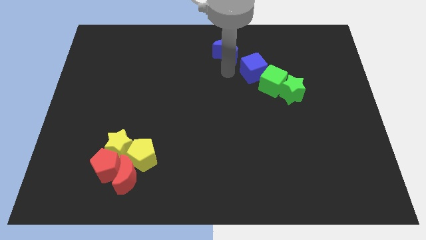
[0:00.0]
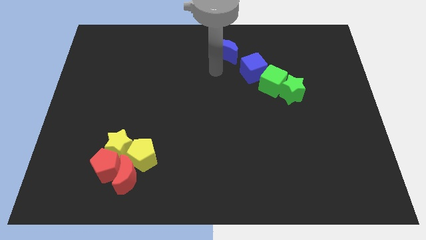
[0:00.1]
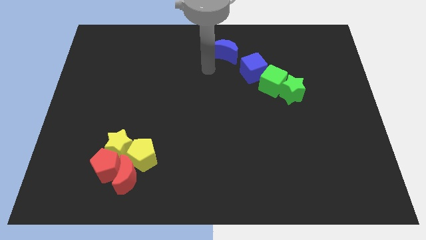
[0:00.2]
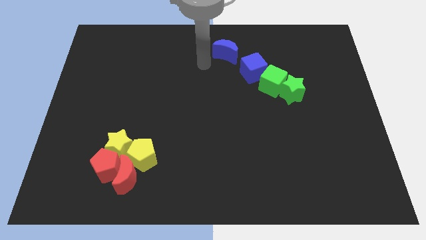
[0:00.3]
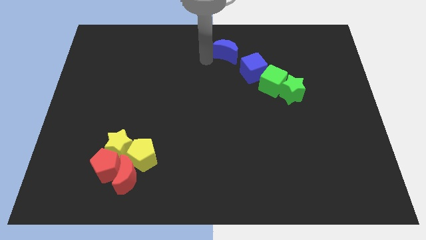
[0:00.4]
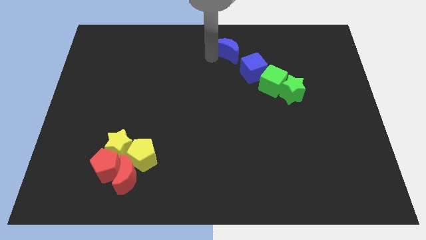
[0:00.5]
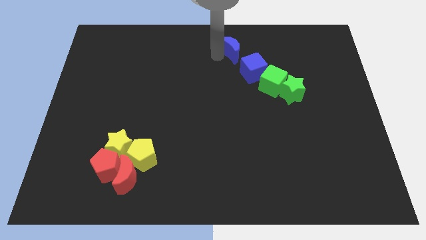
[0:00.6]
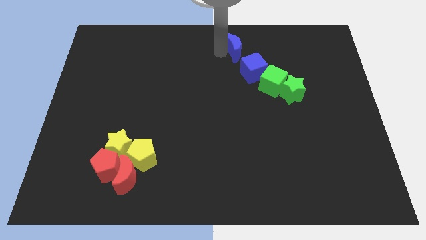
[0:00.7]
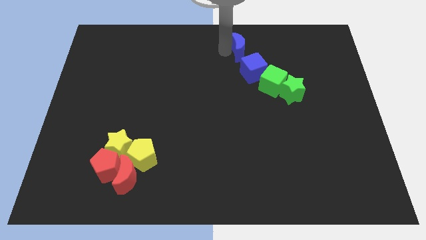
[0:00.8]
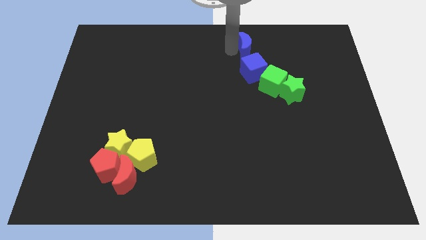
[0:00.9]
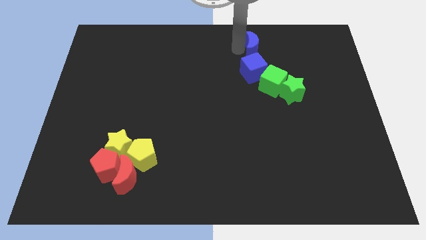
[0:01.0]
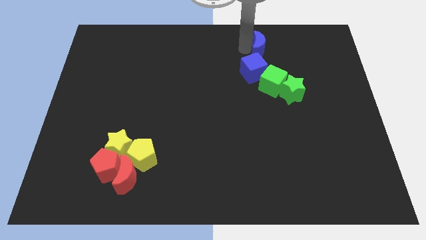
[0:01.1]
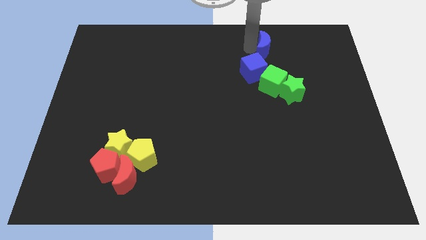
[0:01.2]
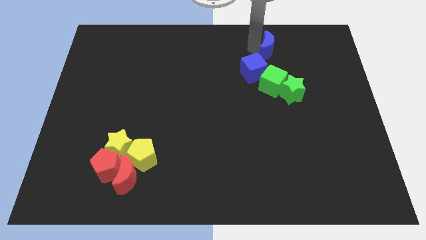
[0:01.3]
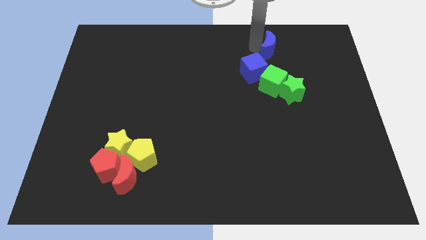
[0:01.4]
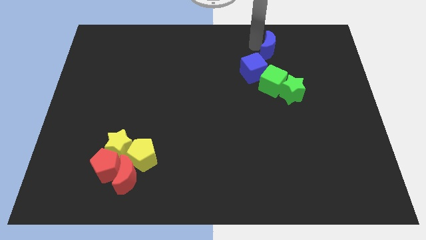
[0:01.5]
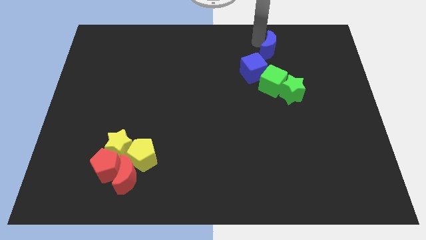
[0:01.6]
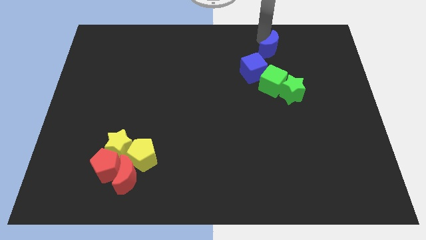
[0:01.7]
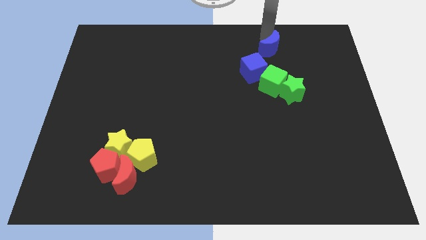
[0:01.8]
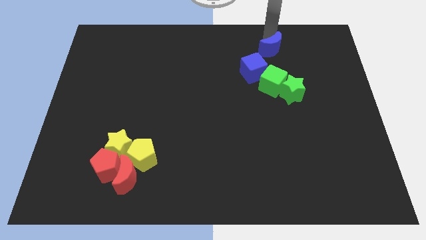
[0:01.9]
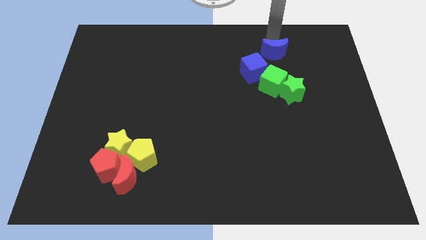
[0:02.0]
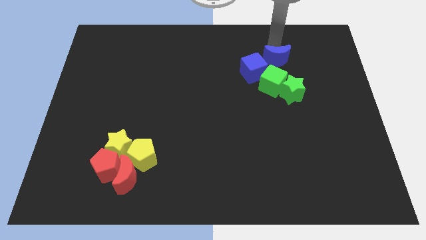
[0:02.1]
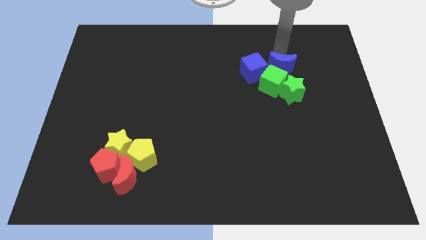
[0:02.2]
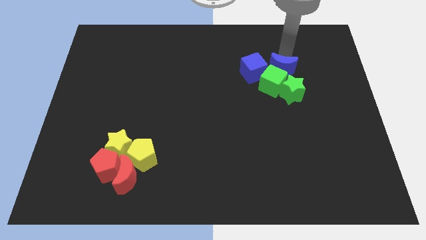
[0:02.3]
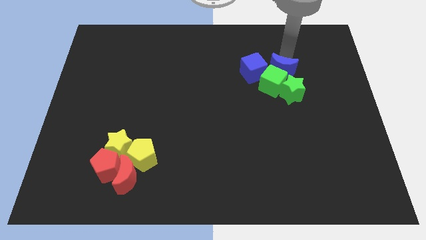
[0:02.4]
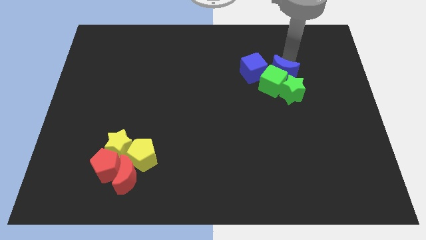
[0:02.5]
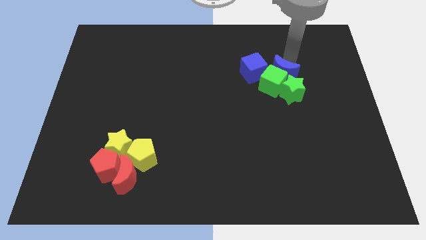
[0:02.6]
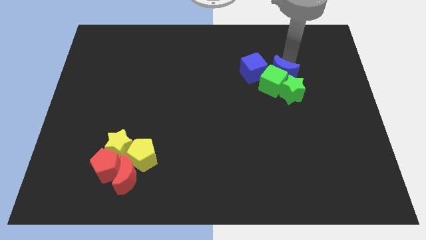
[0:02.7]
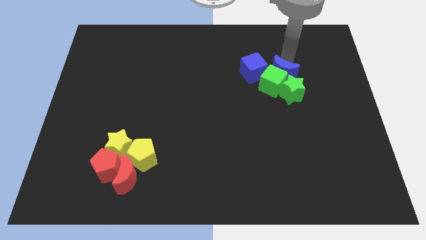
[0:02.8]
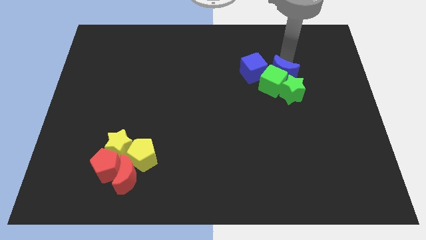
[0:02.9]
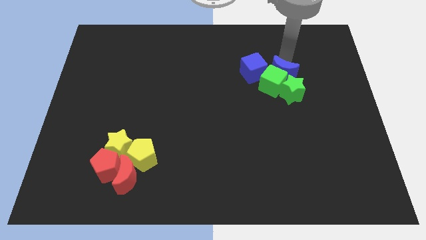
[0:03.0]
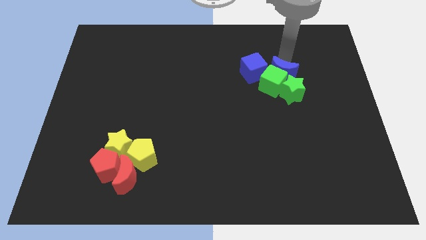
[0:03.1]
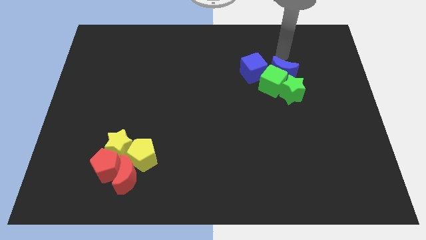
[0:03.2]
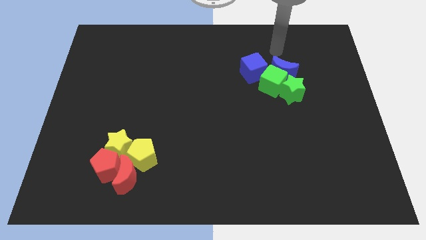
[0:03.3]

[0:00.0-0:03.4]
move the blue moon right above the green cube

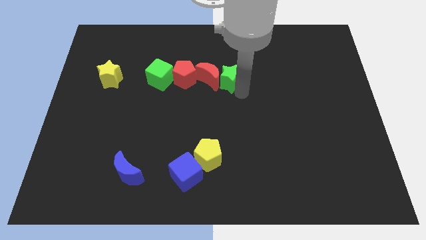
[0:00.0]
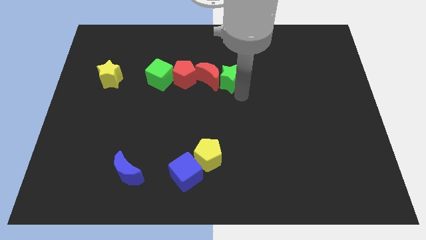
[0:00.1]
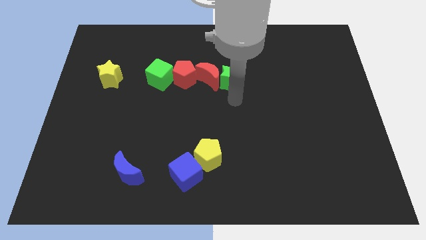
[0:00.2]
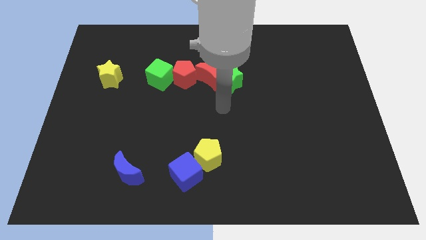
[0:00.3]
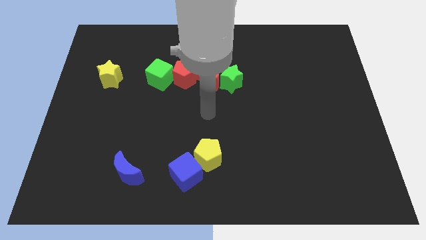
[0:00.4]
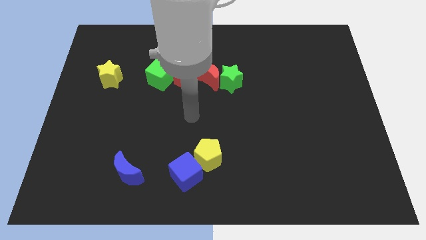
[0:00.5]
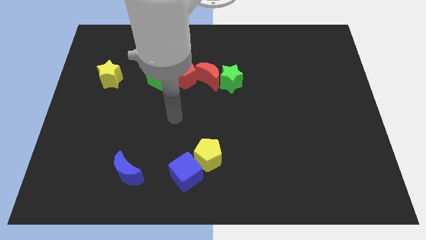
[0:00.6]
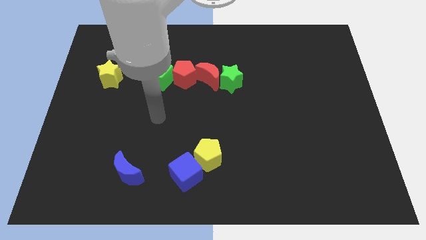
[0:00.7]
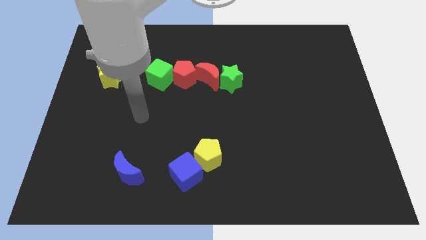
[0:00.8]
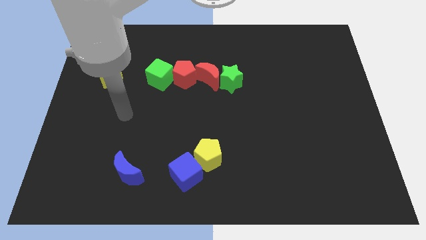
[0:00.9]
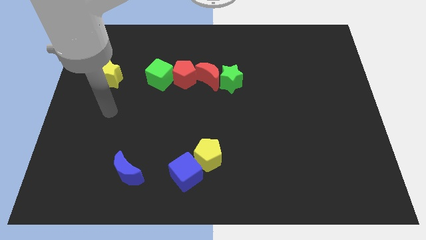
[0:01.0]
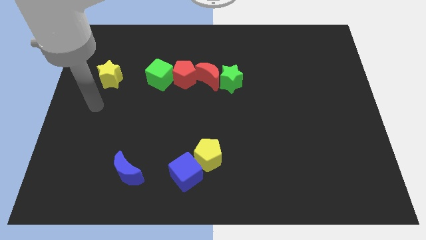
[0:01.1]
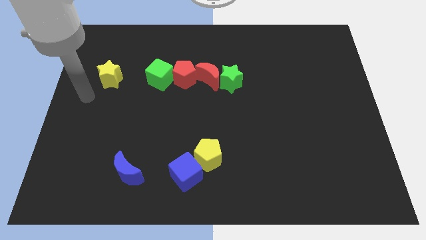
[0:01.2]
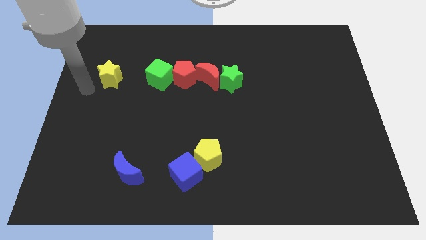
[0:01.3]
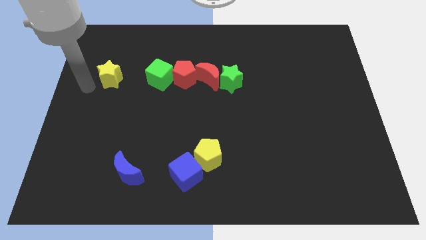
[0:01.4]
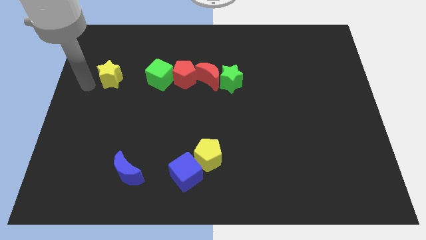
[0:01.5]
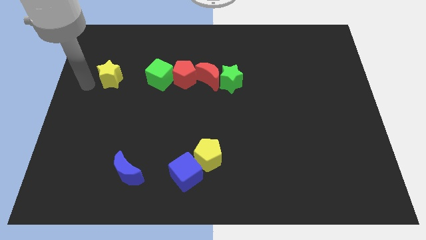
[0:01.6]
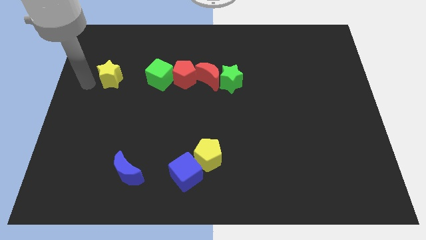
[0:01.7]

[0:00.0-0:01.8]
move your arm away from the green star

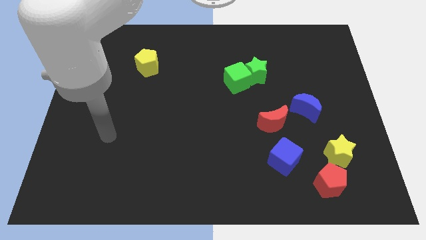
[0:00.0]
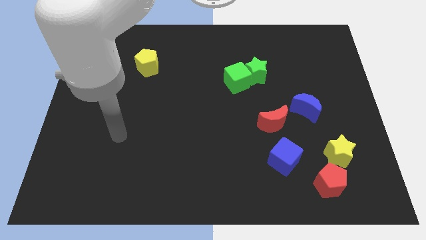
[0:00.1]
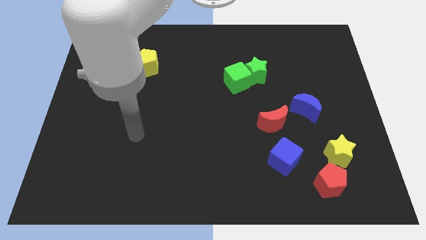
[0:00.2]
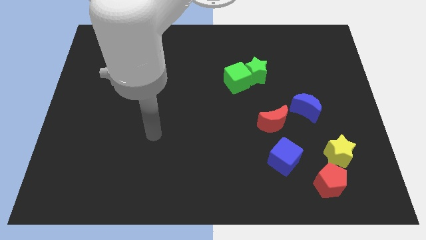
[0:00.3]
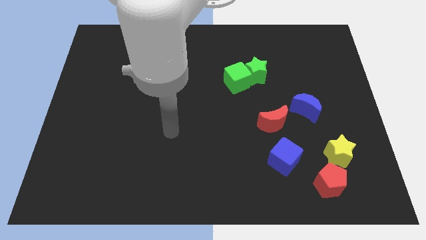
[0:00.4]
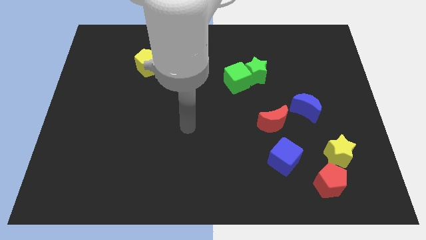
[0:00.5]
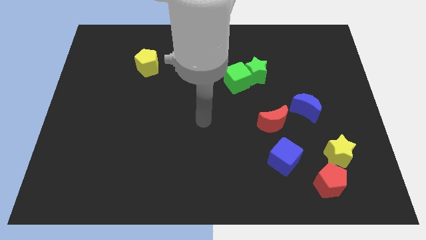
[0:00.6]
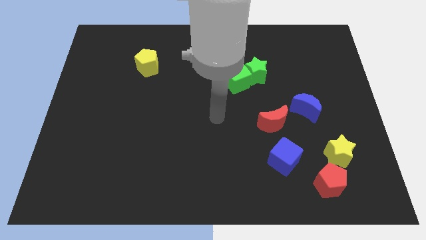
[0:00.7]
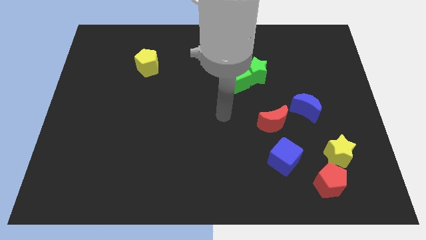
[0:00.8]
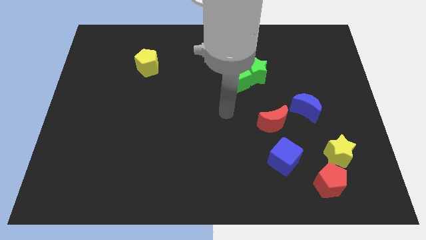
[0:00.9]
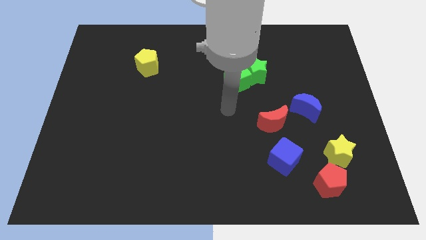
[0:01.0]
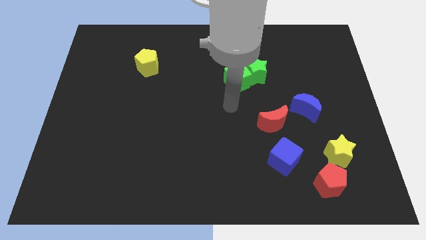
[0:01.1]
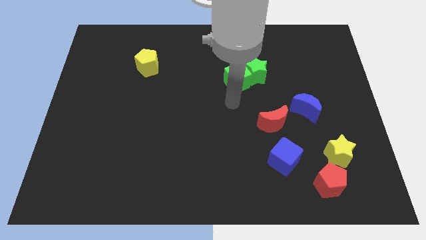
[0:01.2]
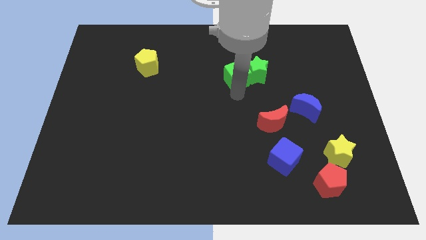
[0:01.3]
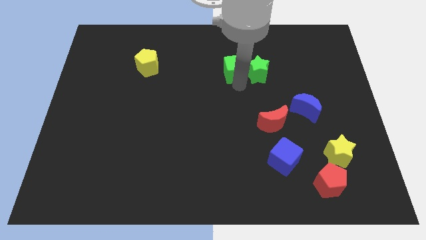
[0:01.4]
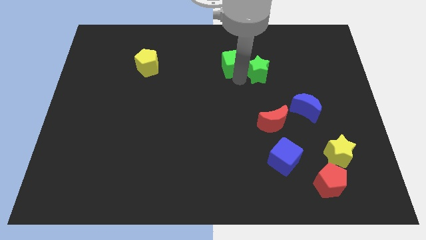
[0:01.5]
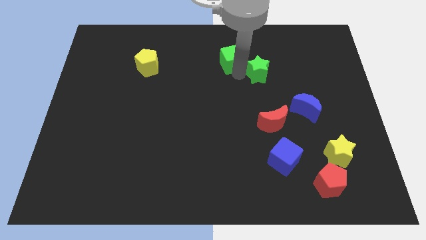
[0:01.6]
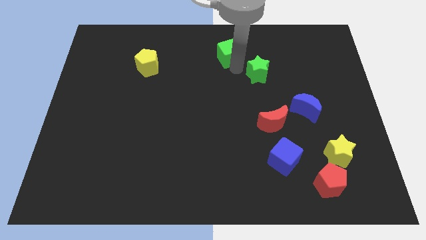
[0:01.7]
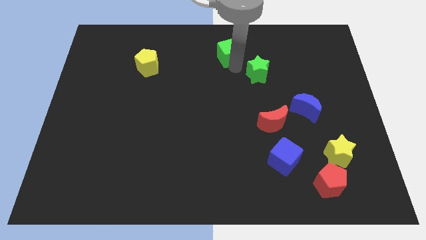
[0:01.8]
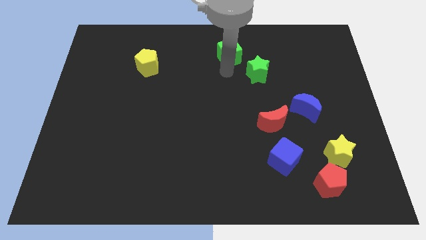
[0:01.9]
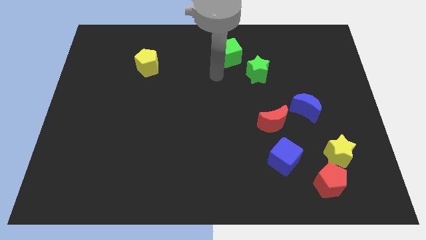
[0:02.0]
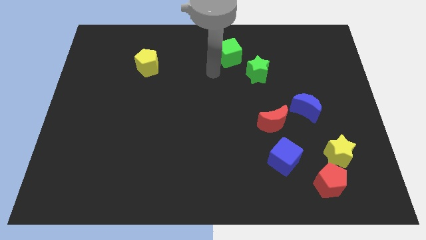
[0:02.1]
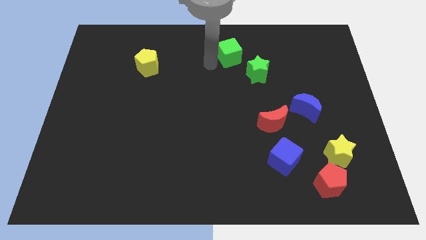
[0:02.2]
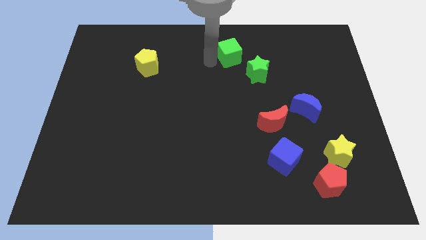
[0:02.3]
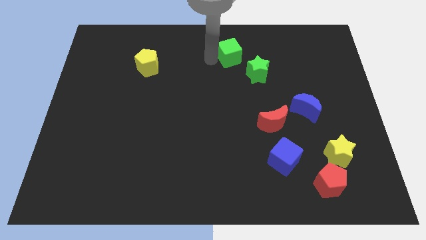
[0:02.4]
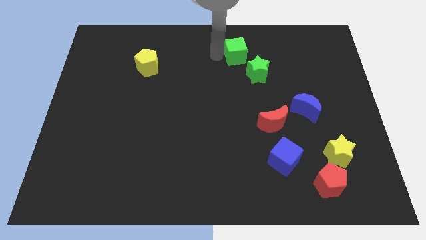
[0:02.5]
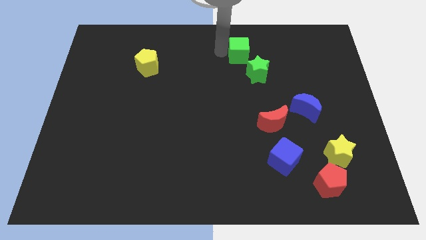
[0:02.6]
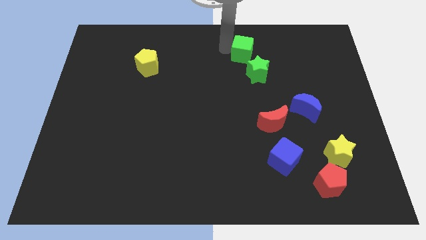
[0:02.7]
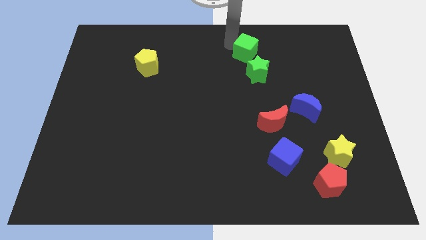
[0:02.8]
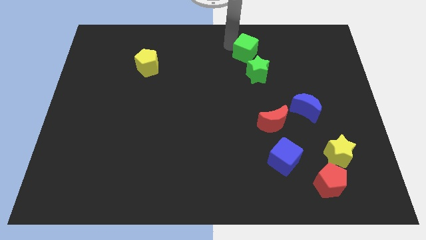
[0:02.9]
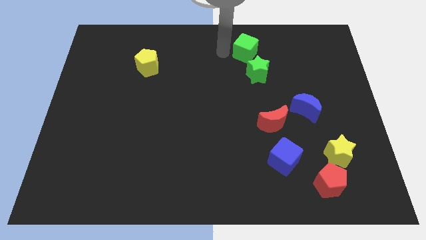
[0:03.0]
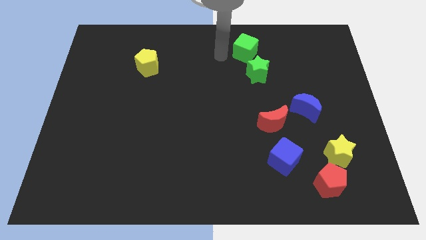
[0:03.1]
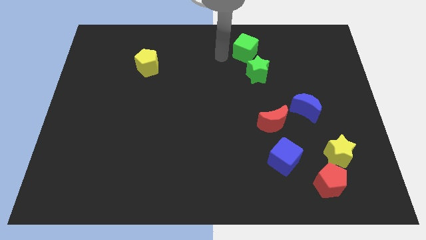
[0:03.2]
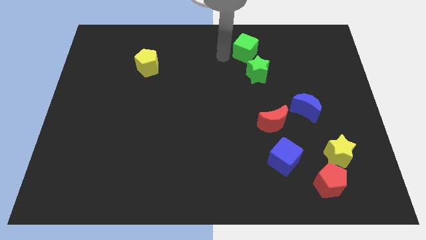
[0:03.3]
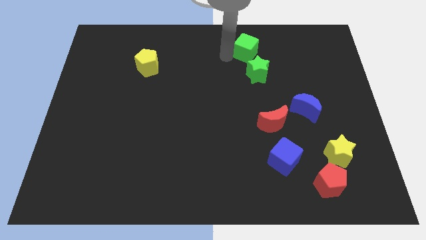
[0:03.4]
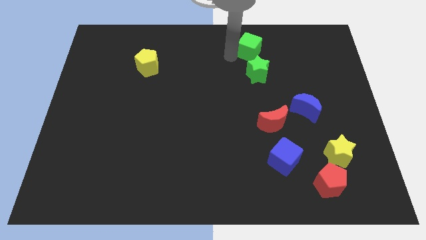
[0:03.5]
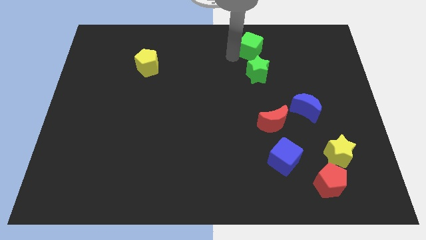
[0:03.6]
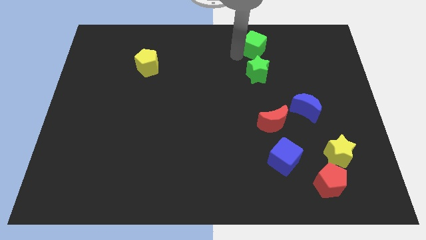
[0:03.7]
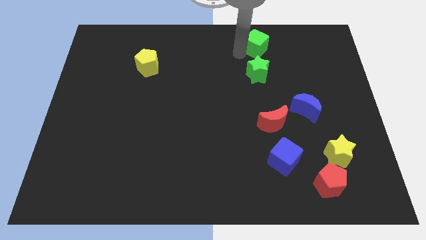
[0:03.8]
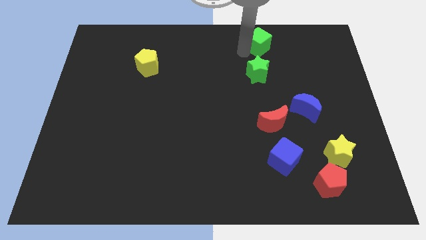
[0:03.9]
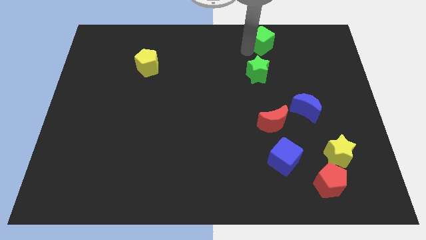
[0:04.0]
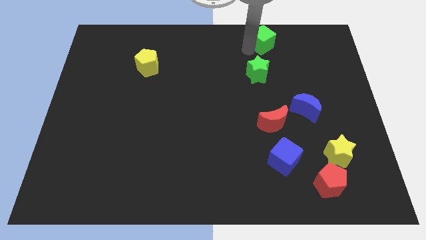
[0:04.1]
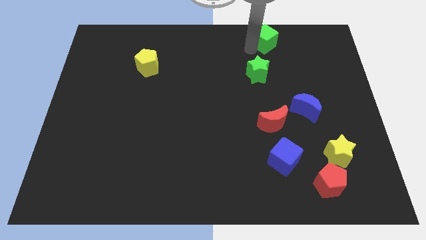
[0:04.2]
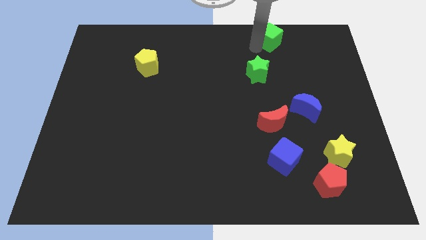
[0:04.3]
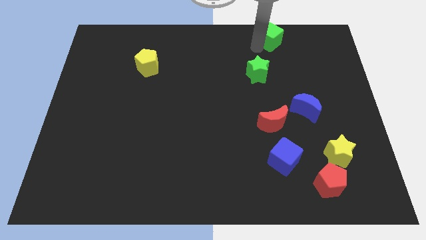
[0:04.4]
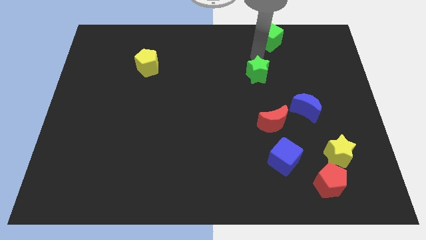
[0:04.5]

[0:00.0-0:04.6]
move the green cube towards the top center of the board
